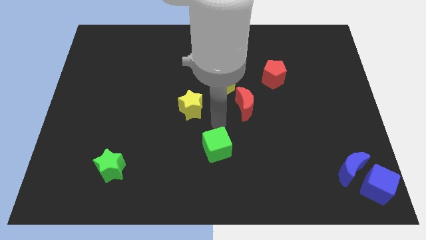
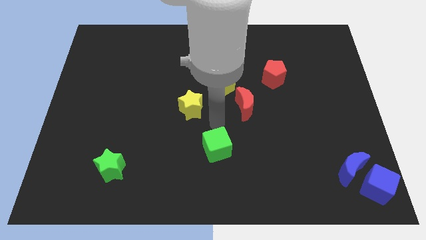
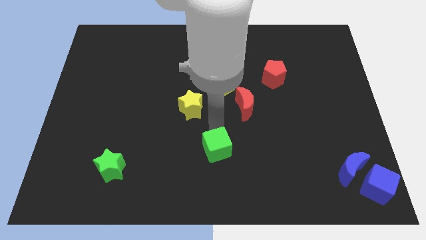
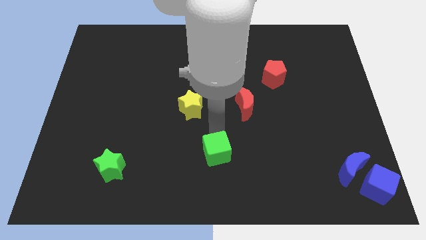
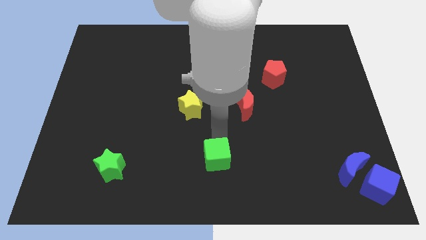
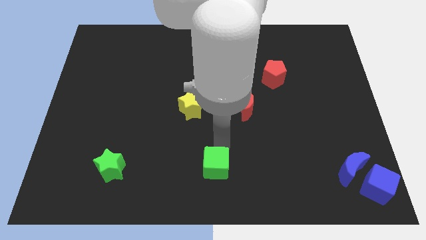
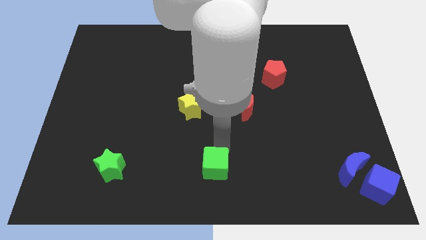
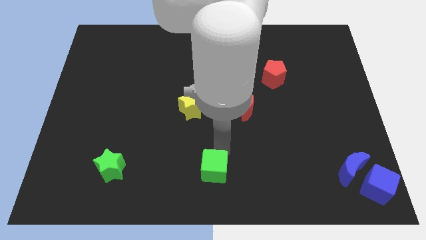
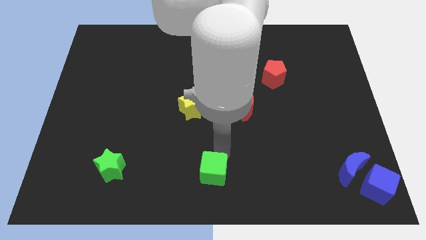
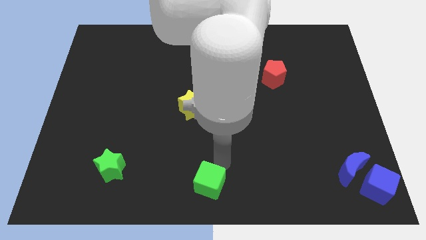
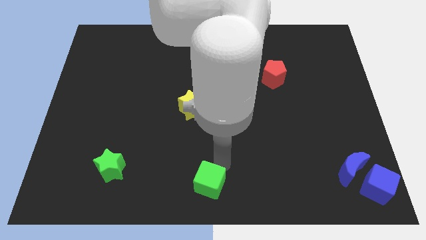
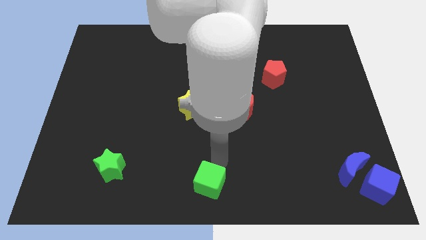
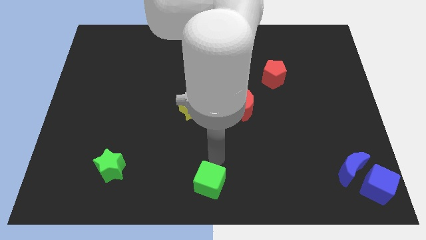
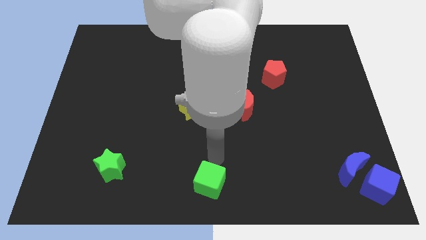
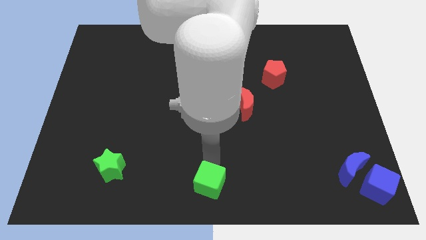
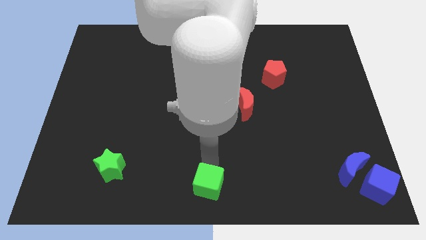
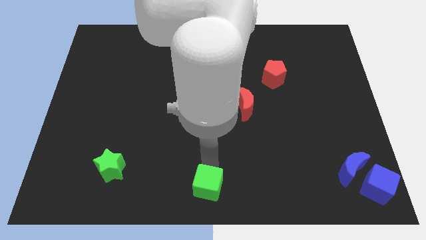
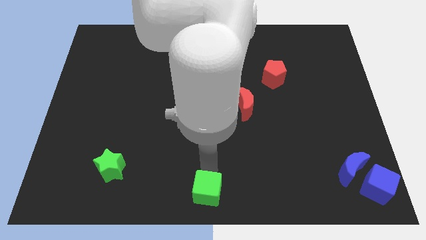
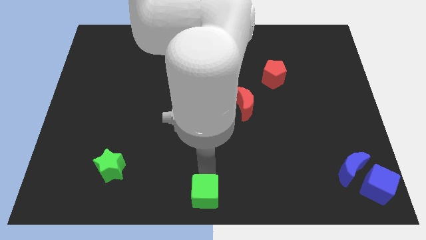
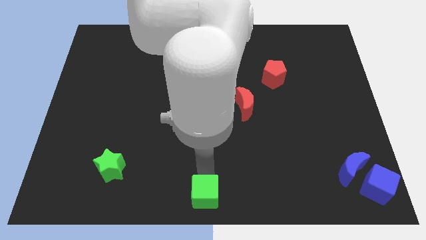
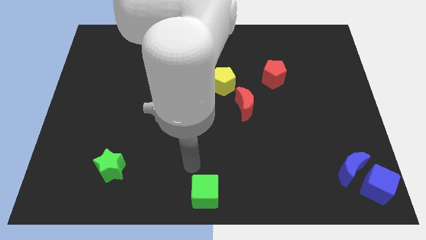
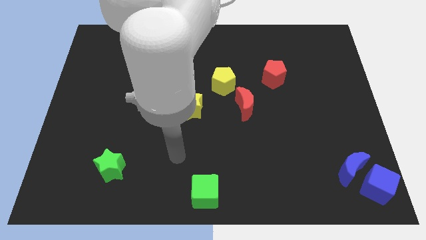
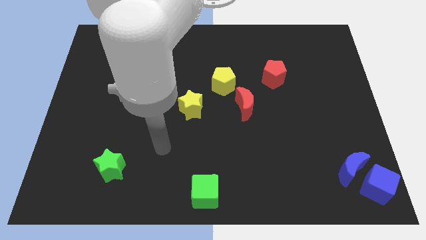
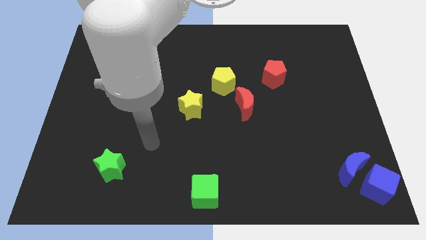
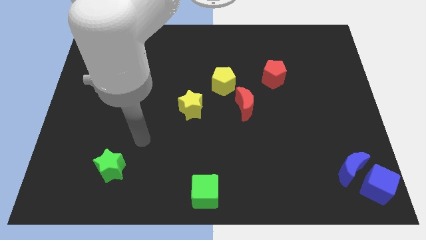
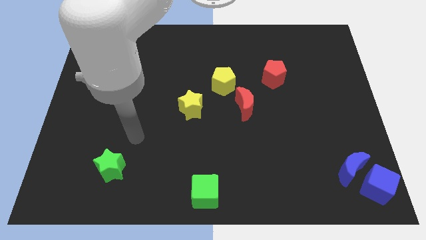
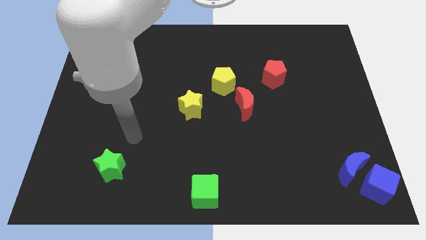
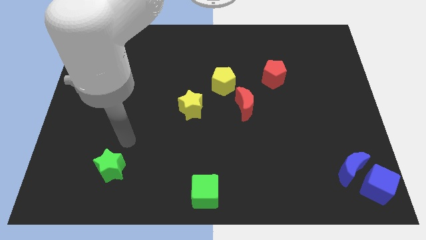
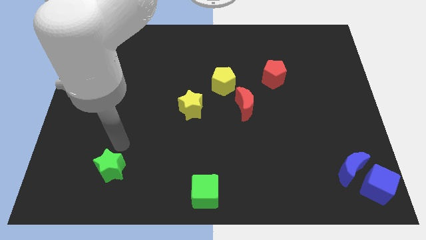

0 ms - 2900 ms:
push the green cube to the bottom center of the board

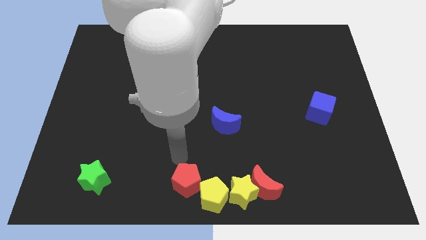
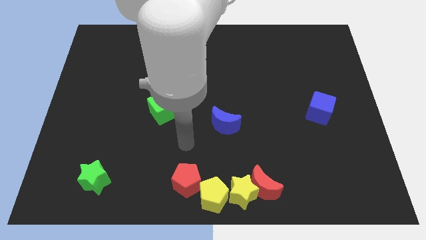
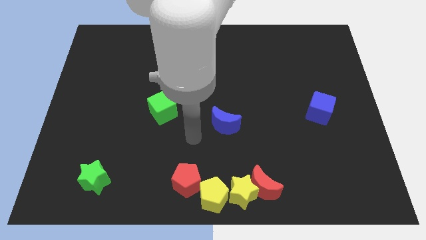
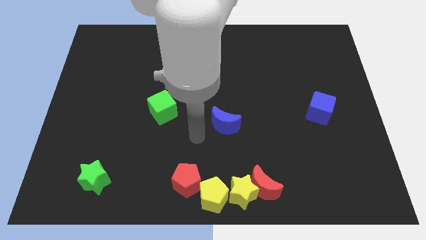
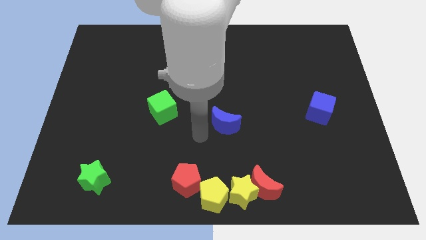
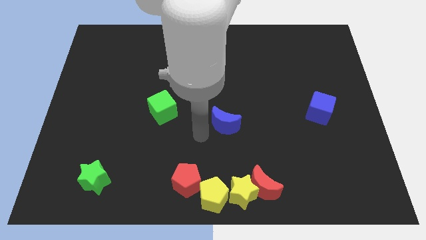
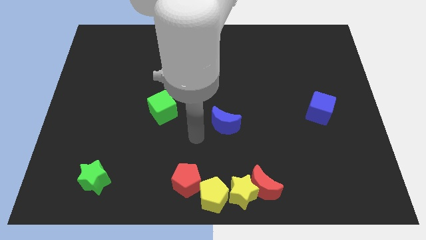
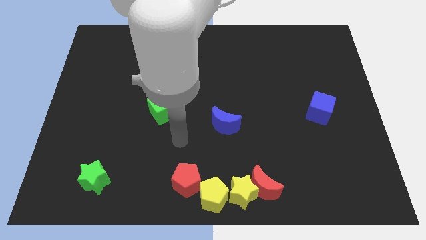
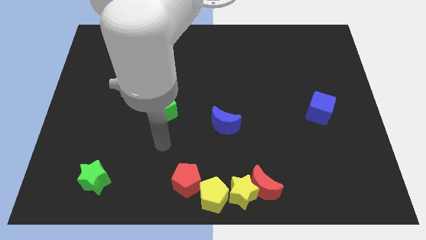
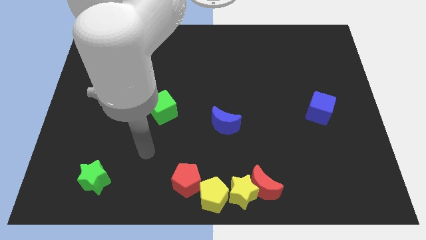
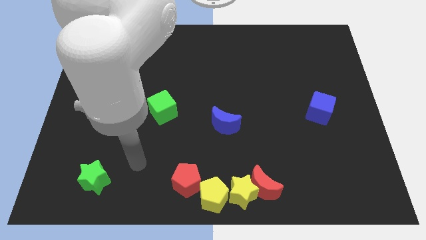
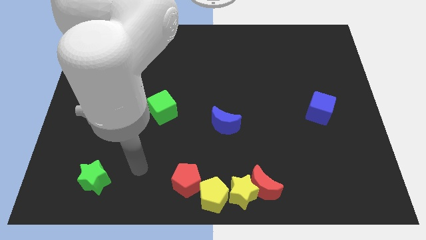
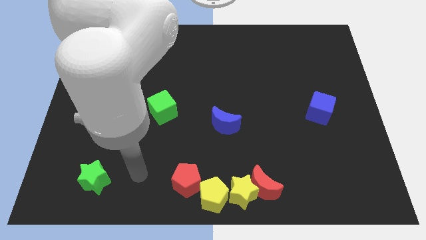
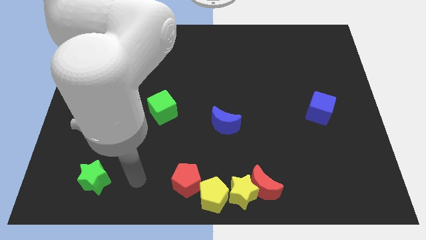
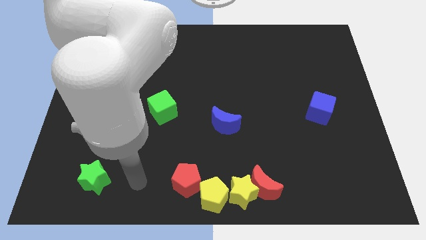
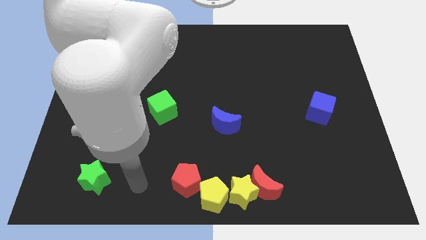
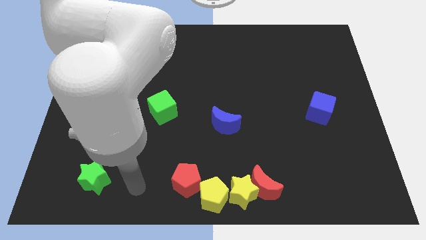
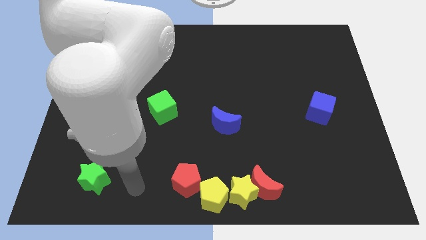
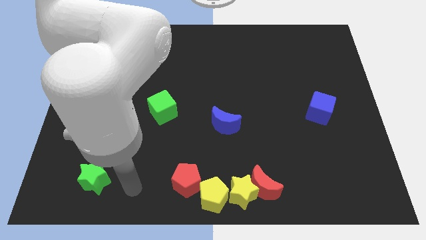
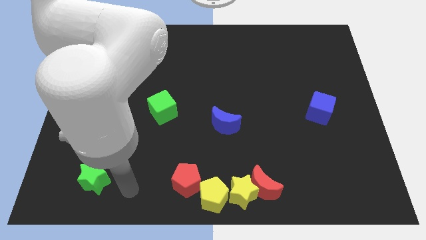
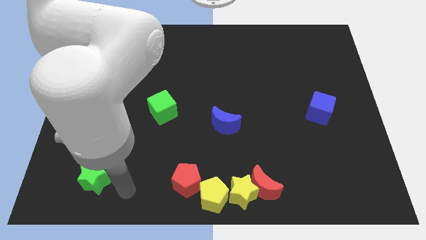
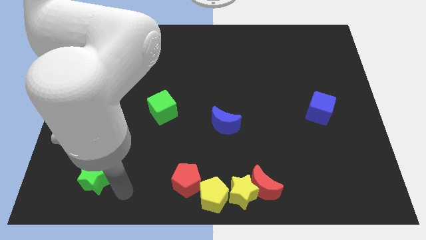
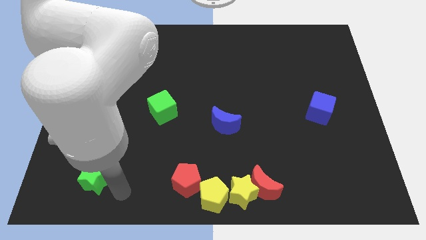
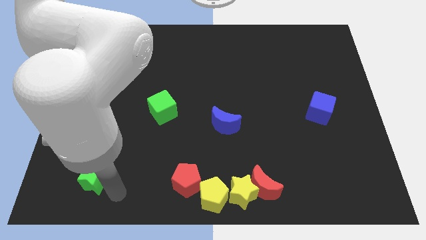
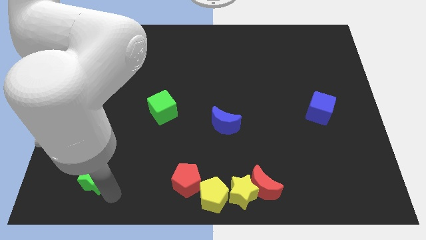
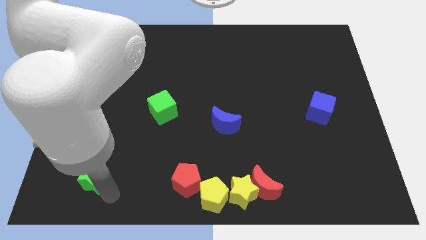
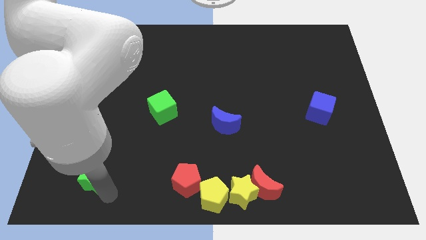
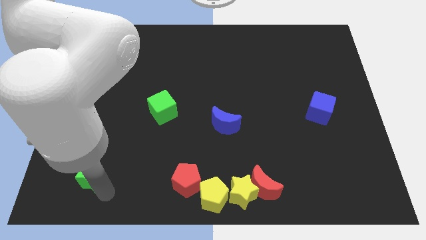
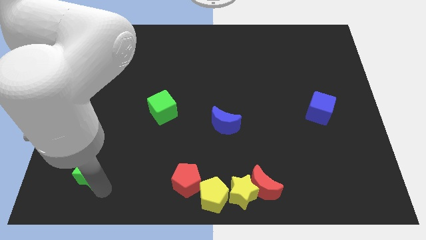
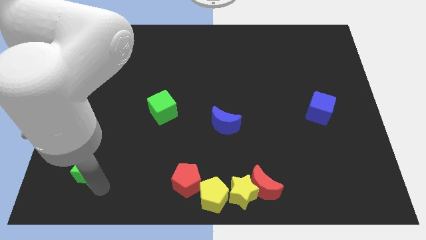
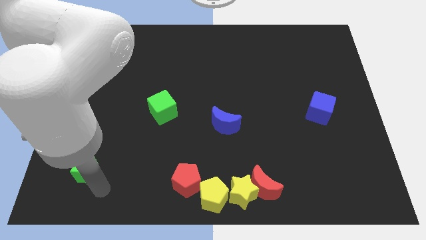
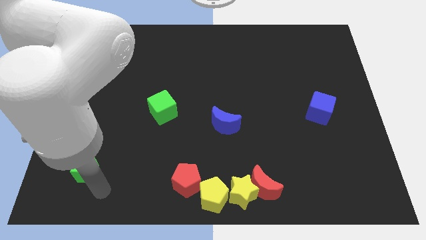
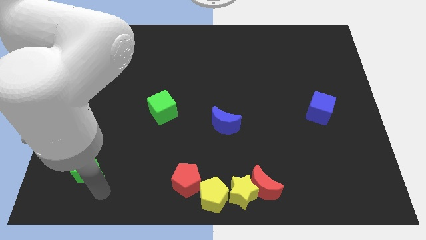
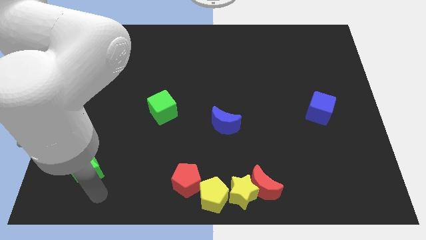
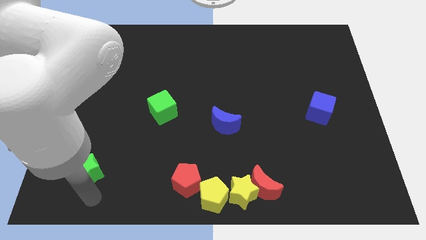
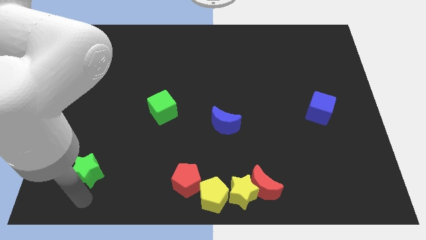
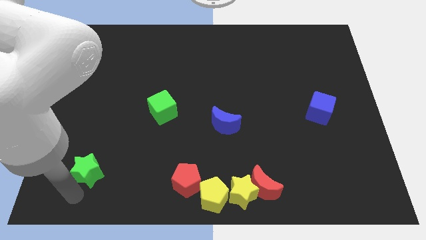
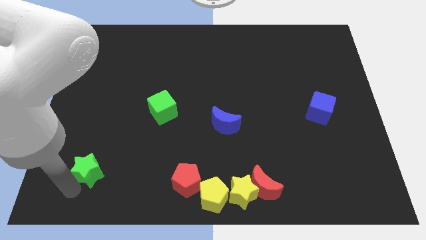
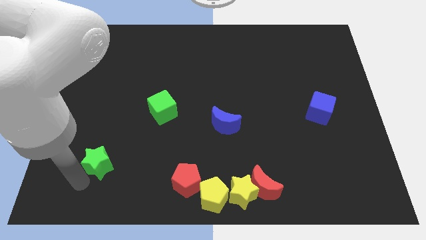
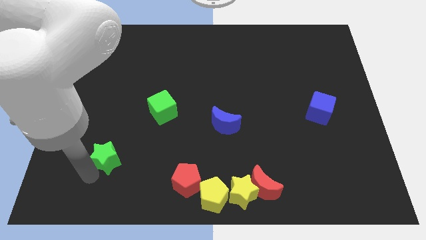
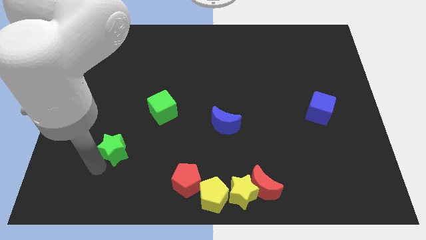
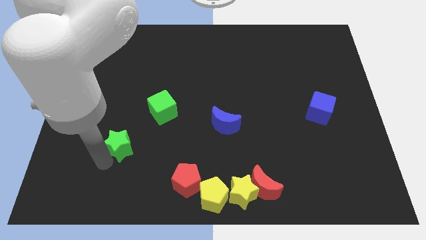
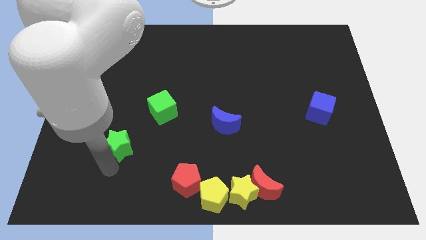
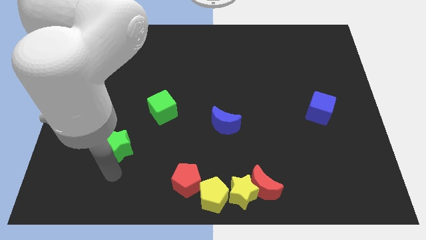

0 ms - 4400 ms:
place the green star diagonal left to the green cube

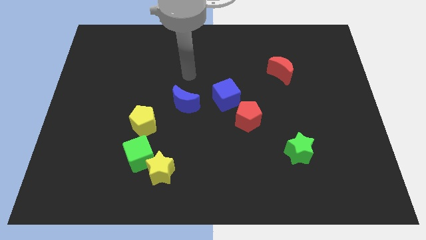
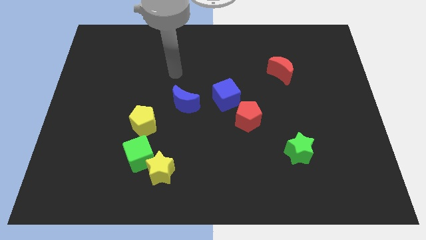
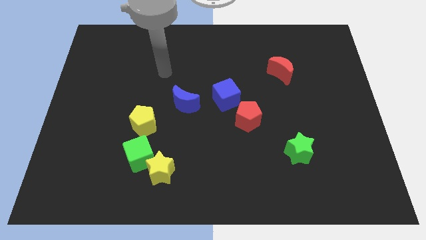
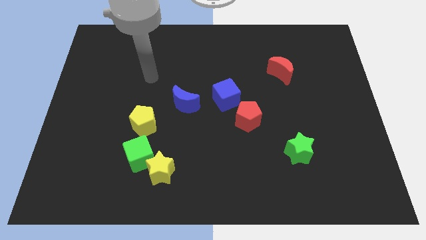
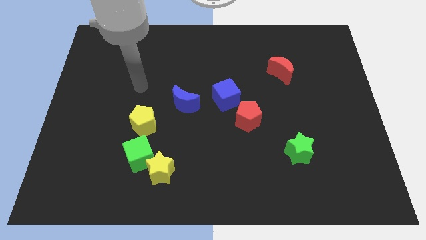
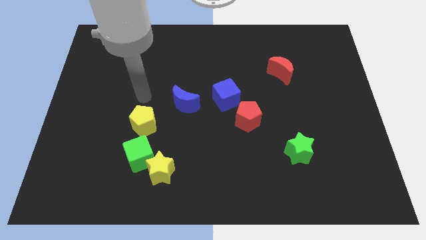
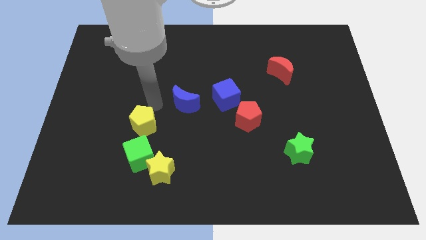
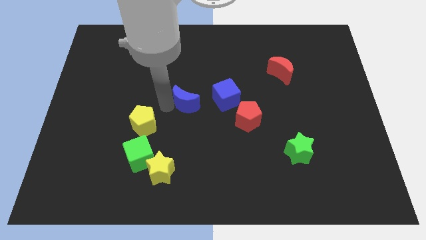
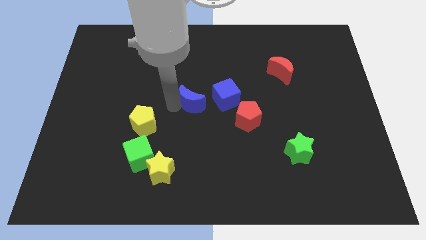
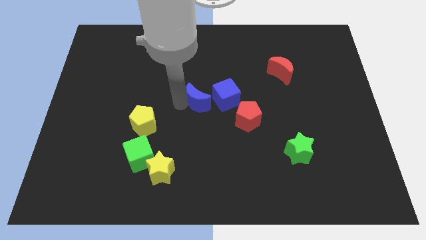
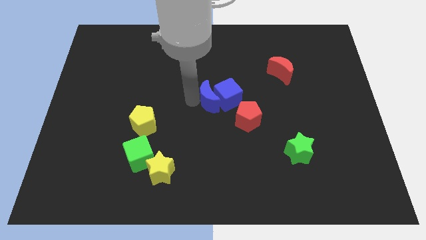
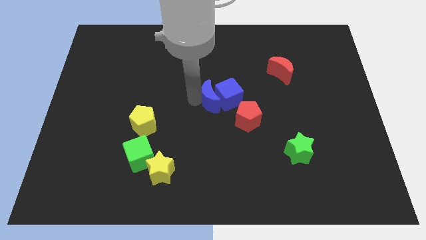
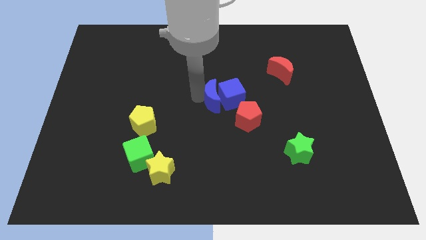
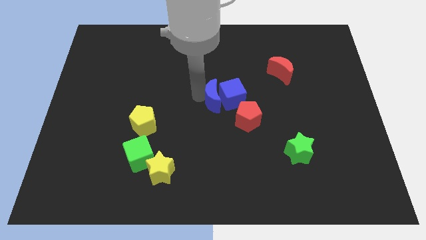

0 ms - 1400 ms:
push the blue moon into the blue cube

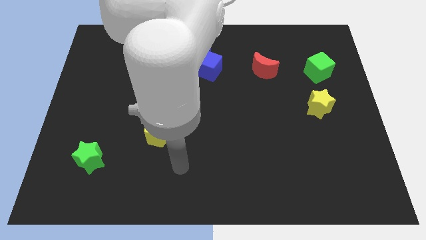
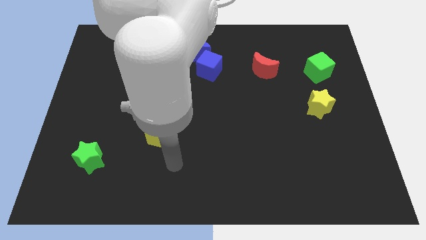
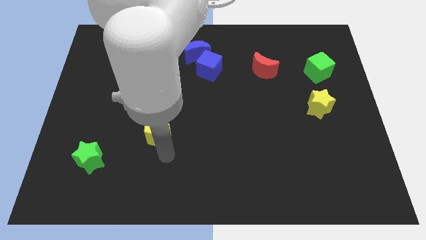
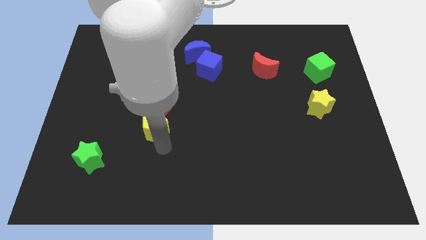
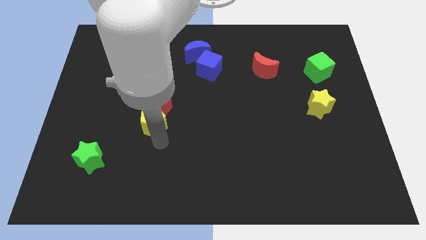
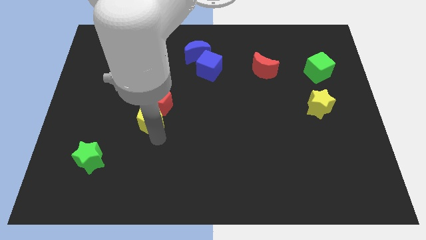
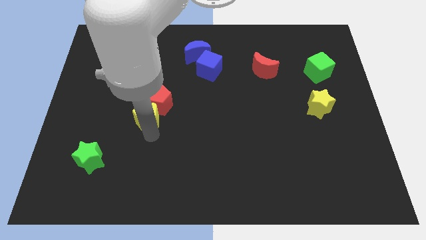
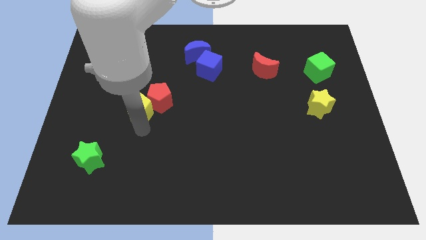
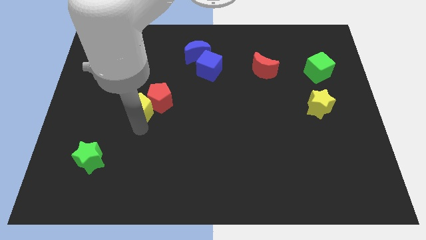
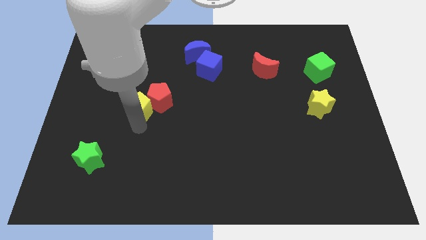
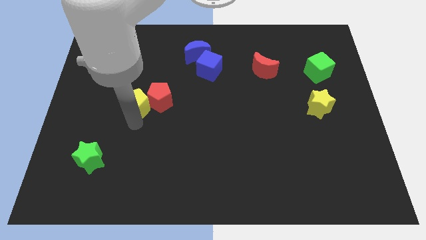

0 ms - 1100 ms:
move the yellow pentagon close to red pentagon
